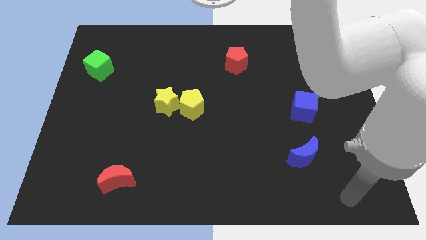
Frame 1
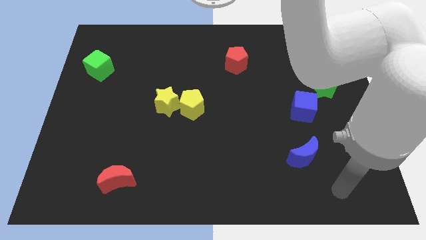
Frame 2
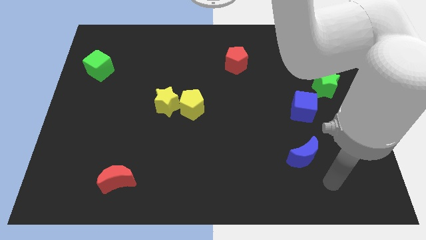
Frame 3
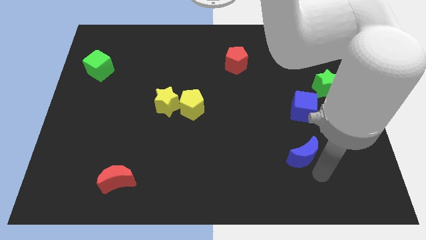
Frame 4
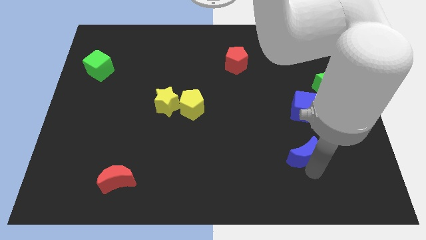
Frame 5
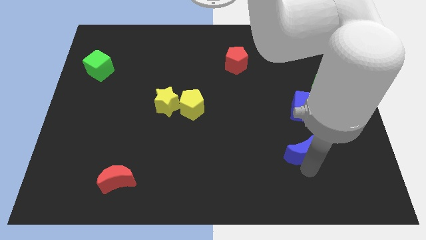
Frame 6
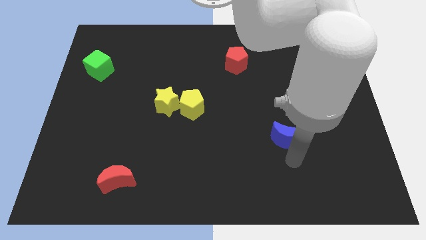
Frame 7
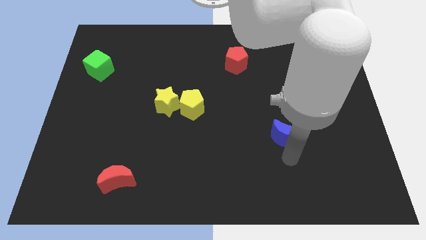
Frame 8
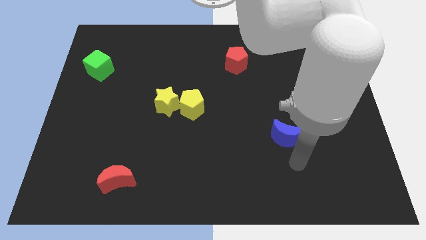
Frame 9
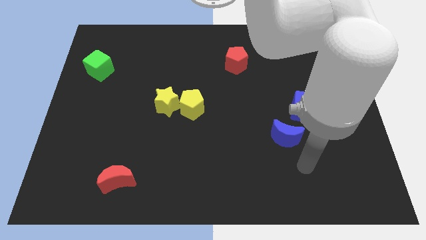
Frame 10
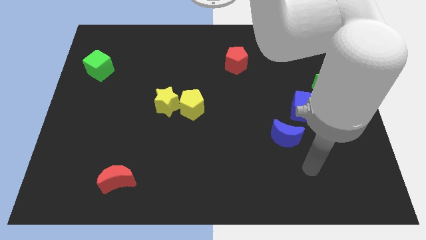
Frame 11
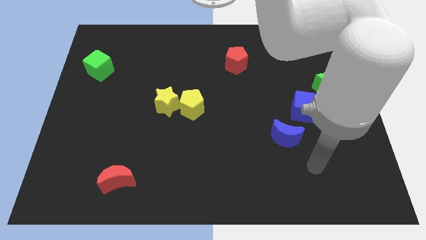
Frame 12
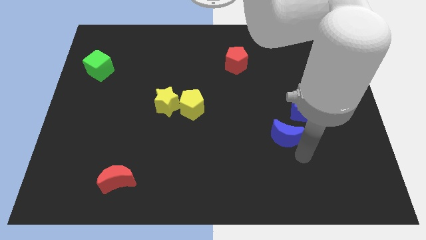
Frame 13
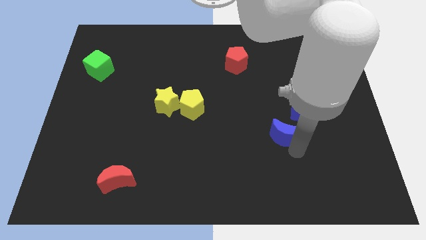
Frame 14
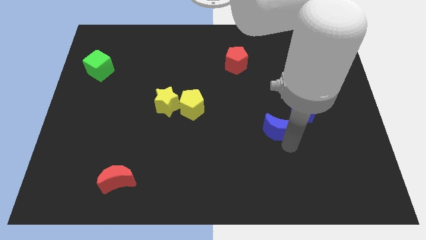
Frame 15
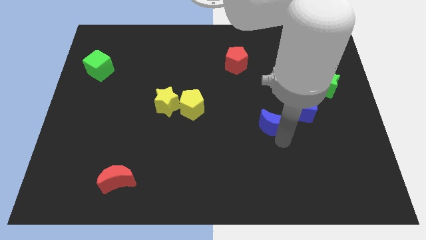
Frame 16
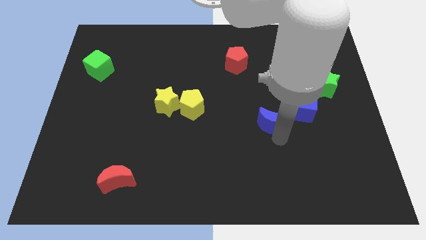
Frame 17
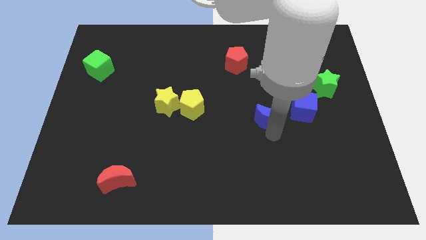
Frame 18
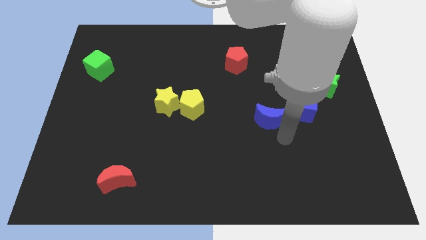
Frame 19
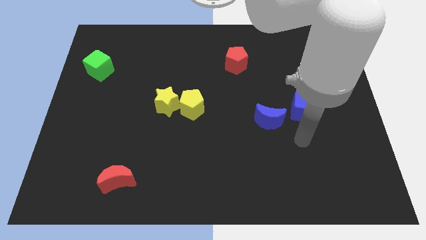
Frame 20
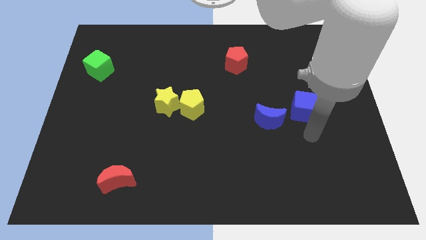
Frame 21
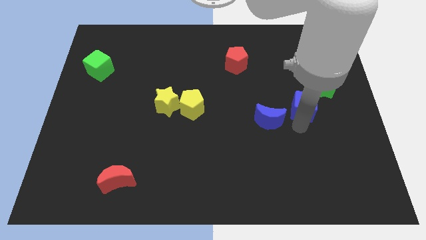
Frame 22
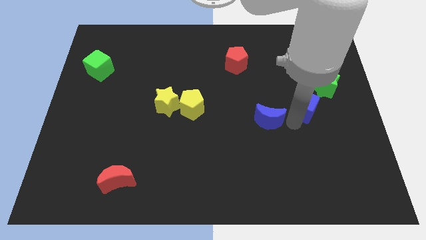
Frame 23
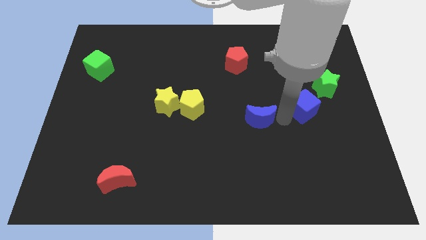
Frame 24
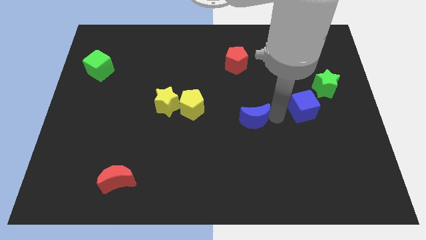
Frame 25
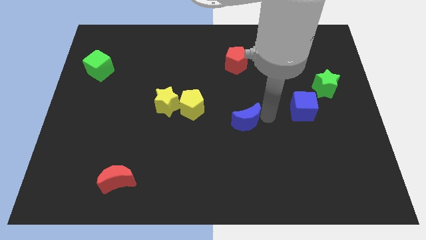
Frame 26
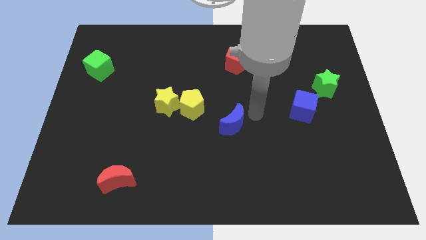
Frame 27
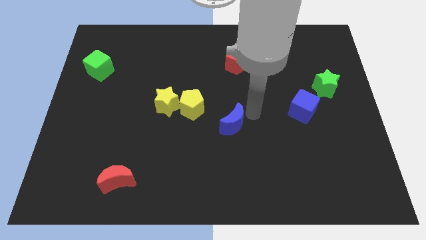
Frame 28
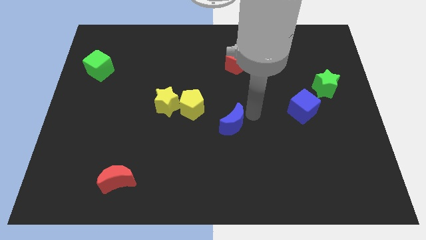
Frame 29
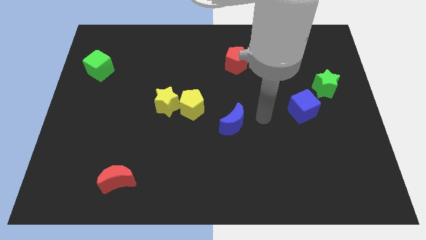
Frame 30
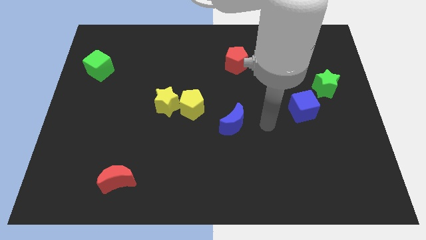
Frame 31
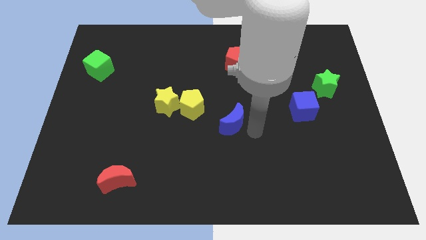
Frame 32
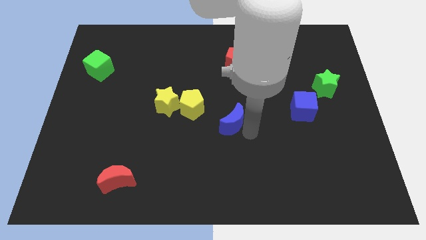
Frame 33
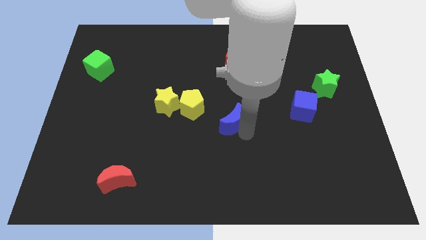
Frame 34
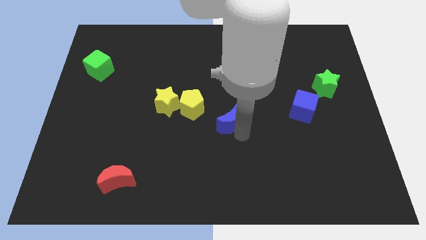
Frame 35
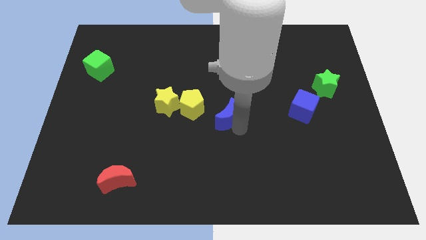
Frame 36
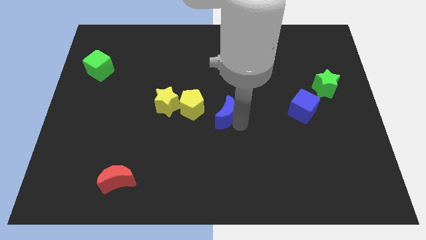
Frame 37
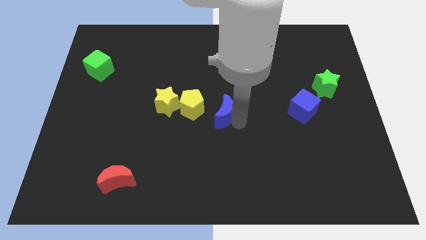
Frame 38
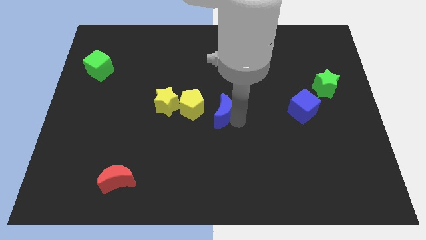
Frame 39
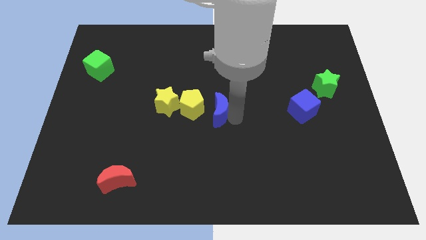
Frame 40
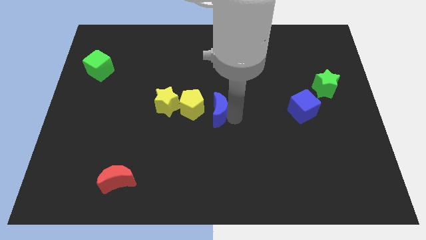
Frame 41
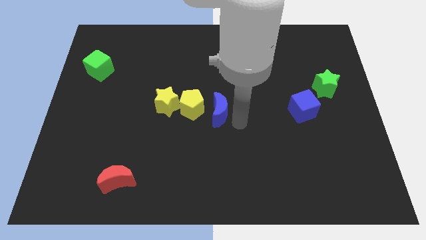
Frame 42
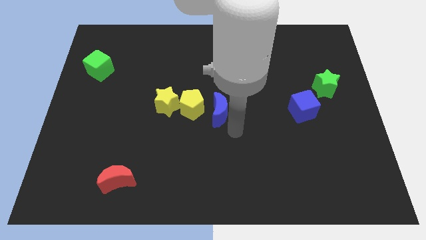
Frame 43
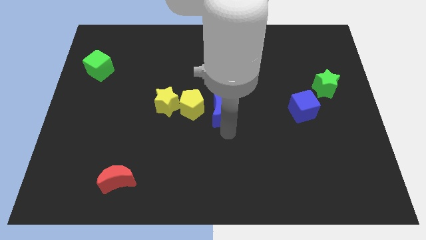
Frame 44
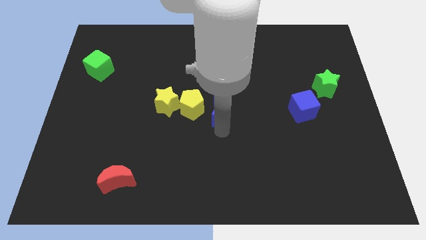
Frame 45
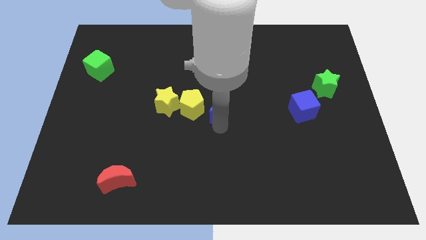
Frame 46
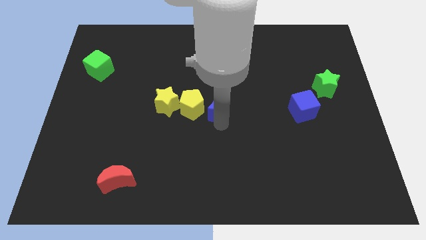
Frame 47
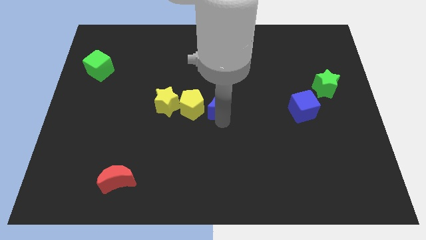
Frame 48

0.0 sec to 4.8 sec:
put the blue moon at center in the line of yellow pentagon

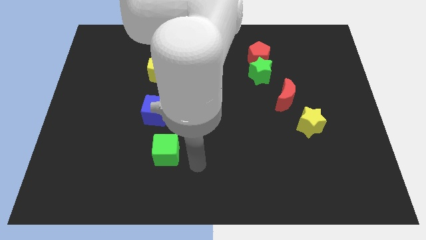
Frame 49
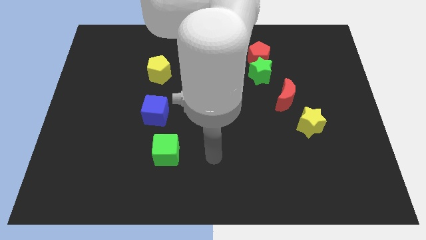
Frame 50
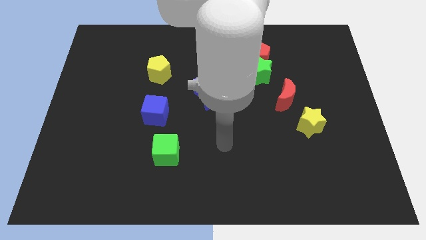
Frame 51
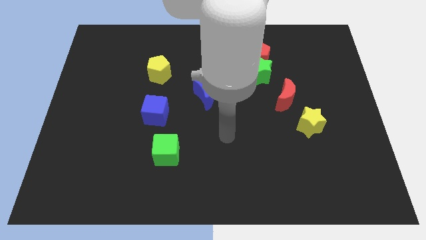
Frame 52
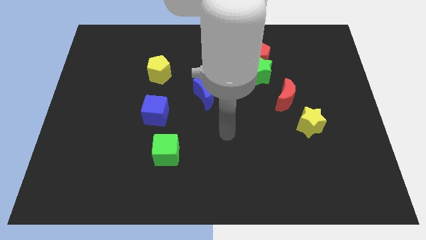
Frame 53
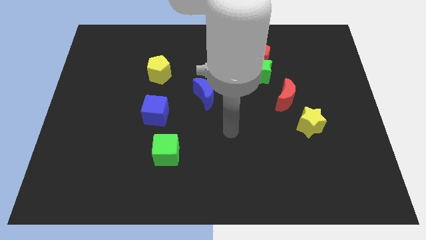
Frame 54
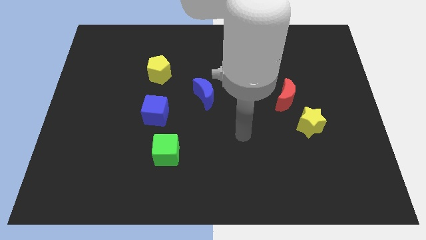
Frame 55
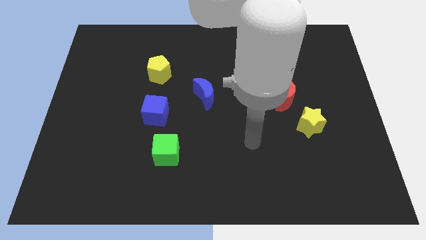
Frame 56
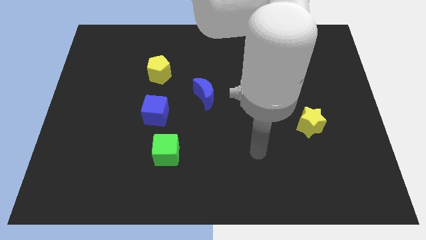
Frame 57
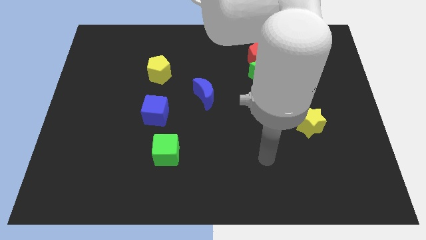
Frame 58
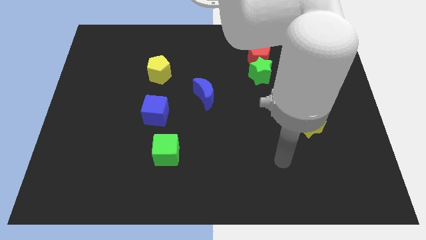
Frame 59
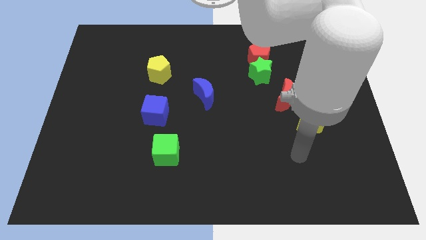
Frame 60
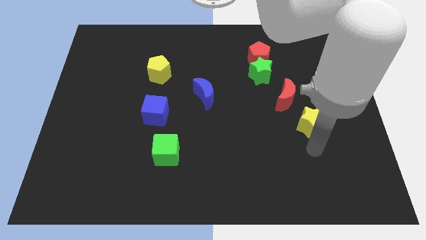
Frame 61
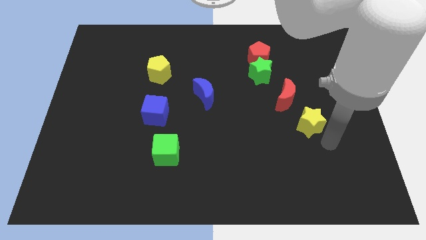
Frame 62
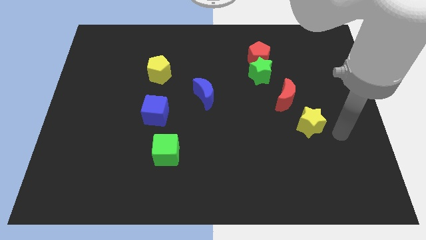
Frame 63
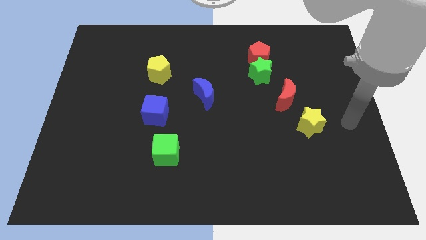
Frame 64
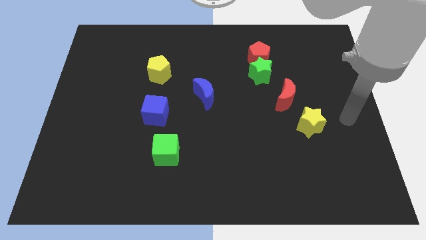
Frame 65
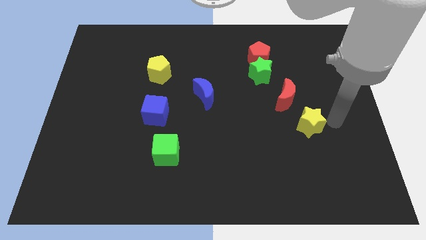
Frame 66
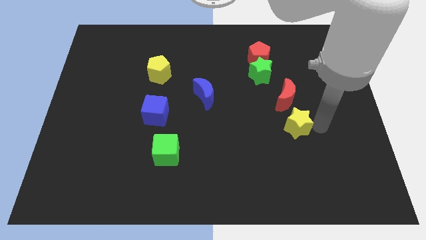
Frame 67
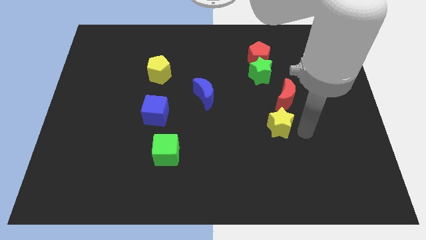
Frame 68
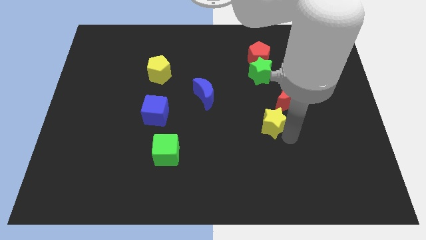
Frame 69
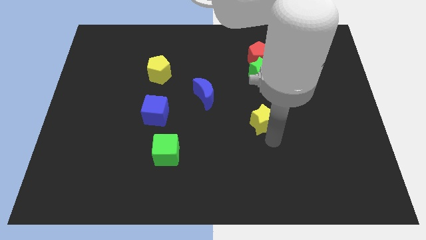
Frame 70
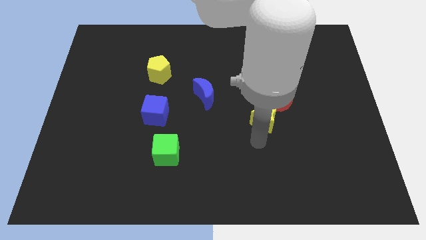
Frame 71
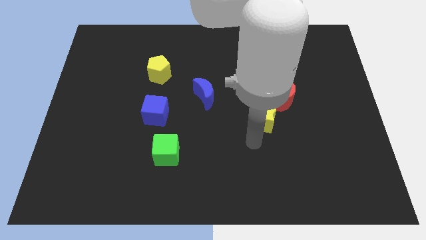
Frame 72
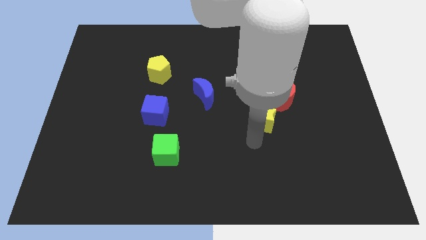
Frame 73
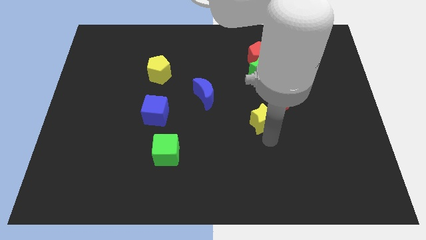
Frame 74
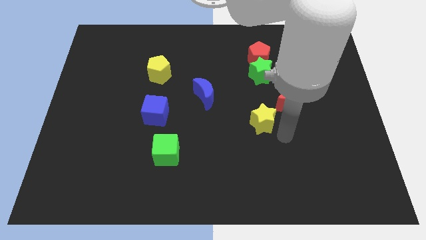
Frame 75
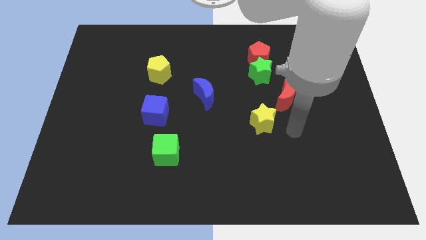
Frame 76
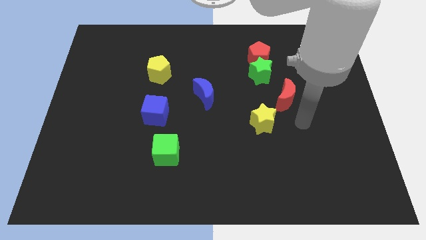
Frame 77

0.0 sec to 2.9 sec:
push the yellow star towards the center of the board

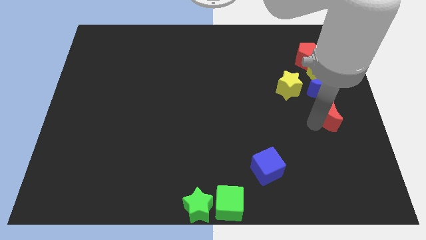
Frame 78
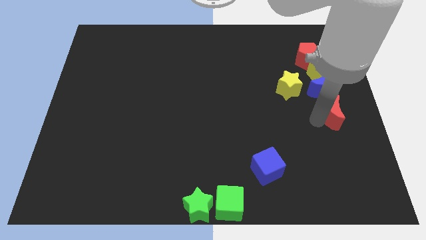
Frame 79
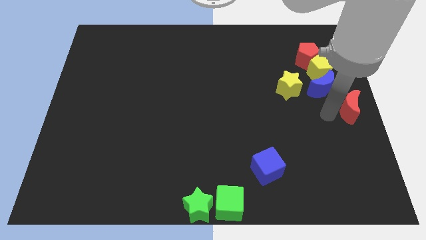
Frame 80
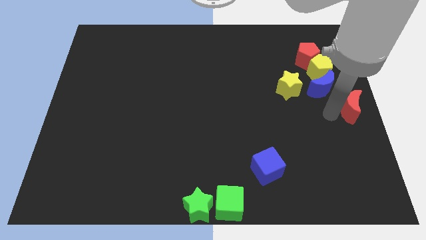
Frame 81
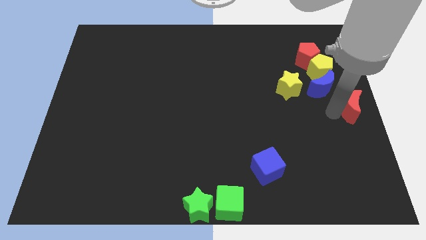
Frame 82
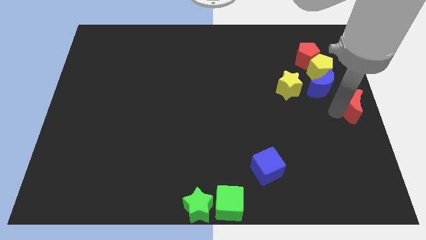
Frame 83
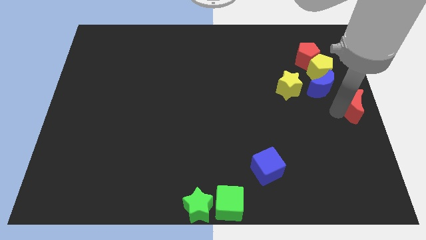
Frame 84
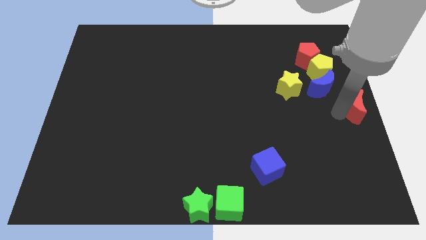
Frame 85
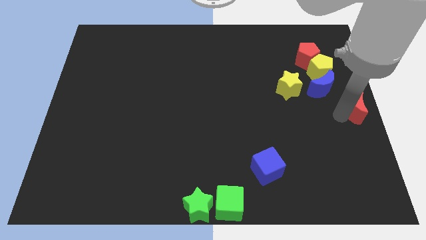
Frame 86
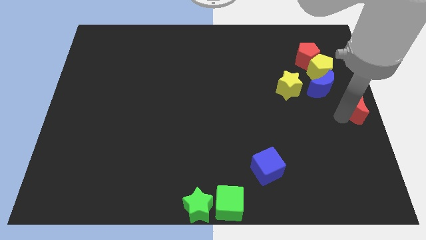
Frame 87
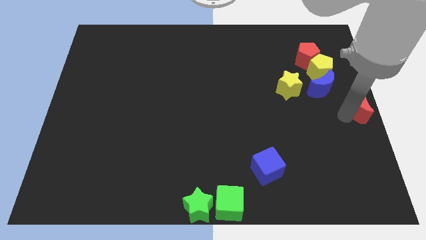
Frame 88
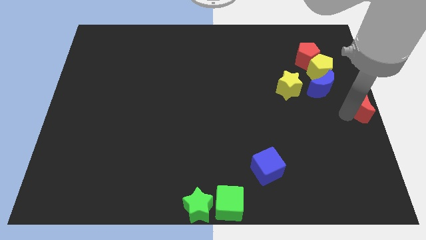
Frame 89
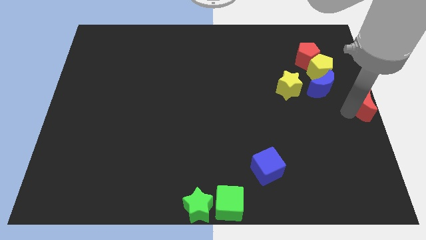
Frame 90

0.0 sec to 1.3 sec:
move the red crescentb to the right middle of the board

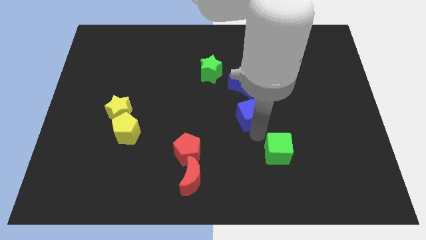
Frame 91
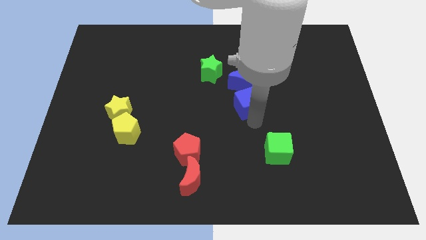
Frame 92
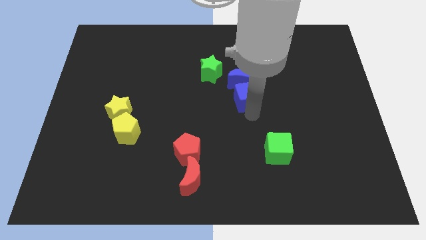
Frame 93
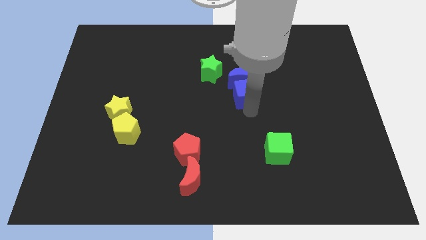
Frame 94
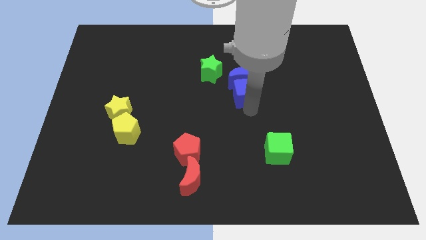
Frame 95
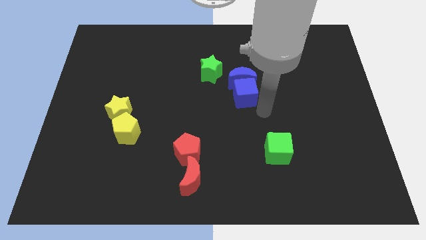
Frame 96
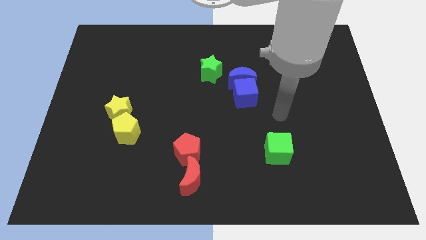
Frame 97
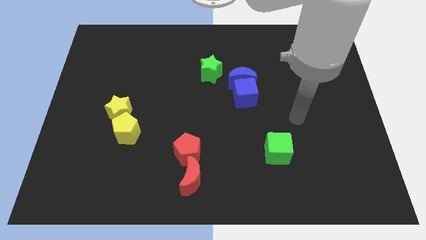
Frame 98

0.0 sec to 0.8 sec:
put the blue cube into the blue moon
